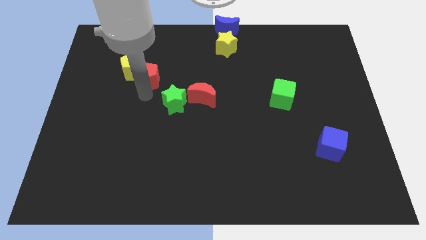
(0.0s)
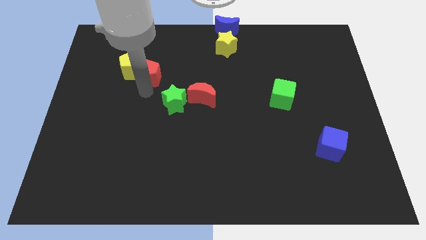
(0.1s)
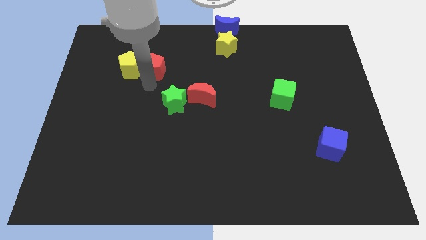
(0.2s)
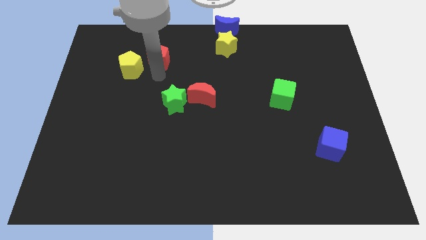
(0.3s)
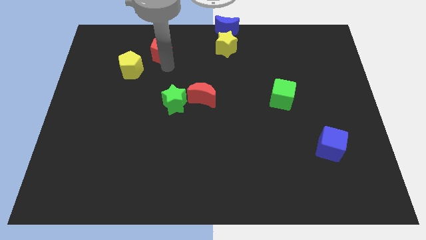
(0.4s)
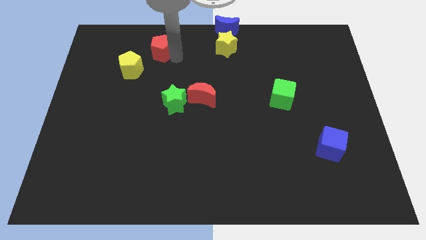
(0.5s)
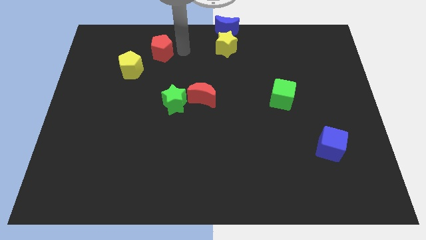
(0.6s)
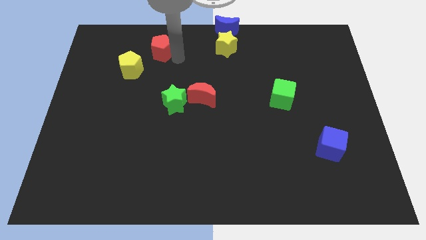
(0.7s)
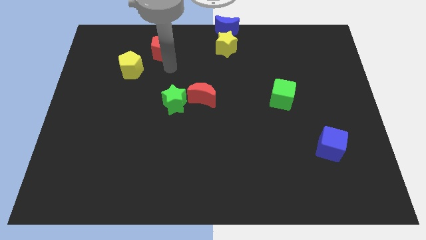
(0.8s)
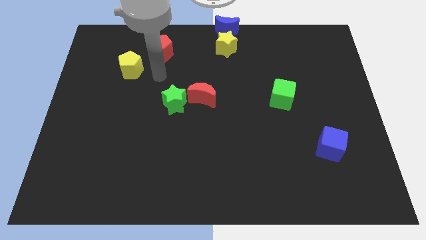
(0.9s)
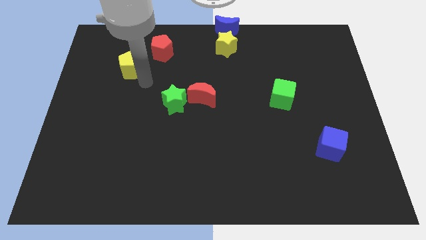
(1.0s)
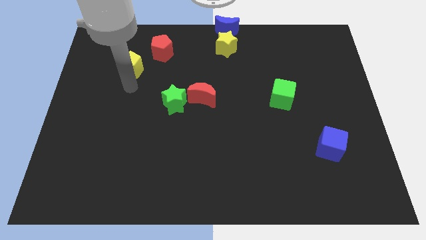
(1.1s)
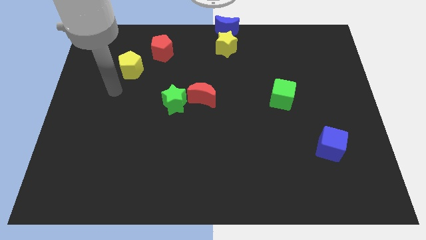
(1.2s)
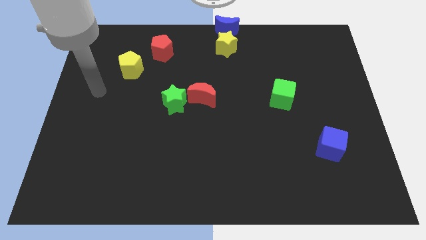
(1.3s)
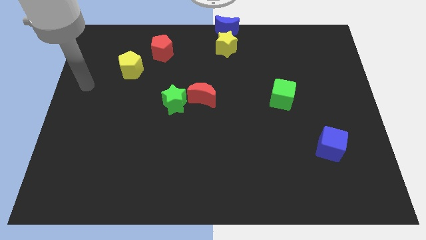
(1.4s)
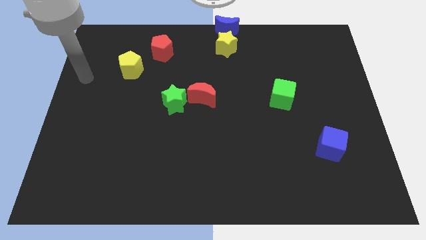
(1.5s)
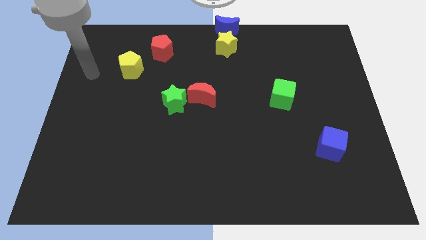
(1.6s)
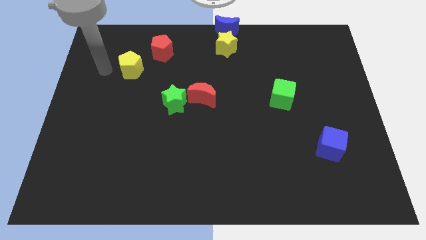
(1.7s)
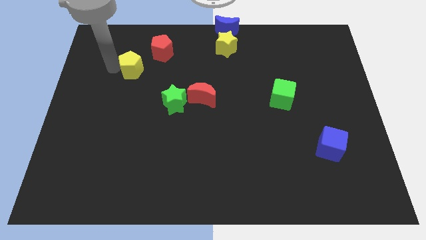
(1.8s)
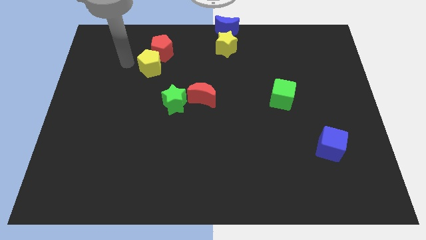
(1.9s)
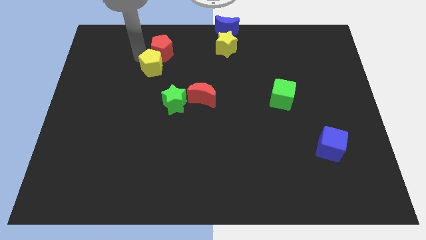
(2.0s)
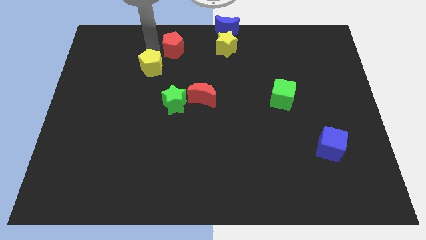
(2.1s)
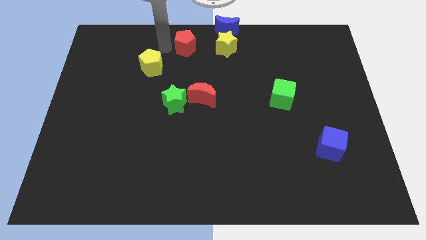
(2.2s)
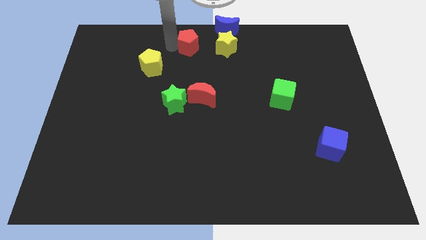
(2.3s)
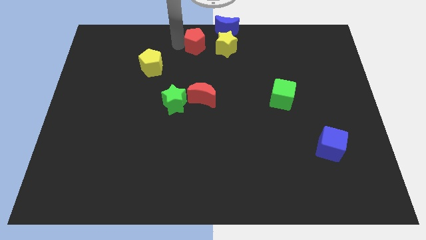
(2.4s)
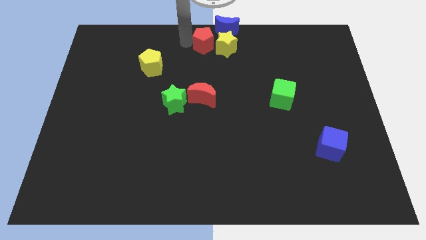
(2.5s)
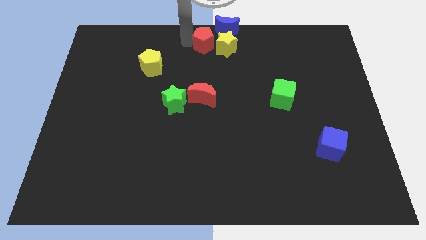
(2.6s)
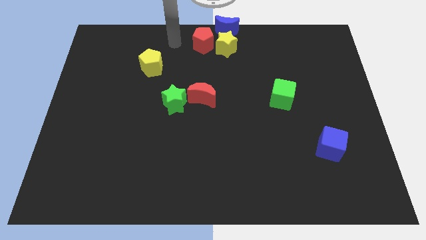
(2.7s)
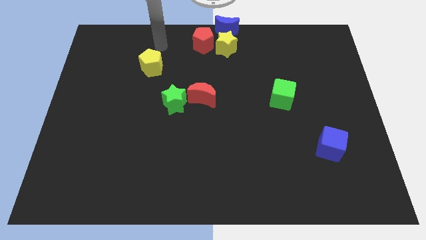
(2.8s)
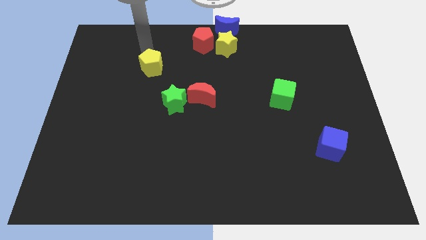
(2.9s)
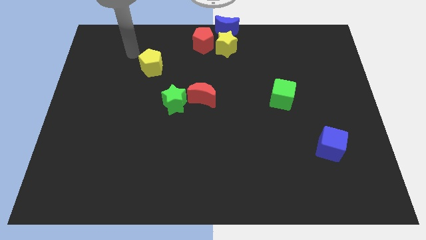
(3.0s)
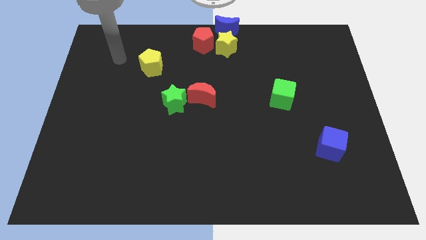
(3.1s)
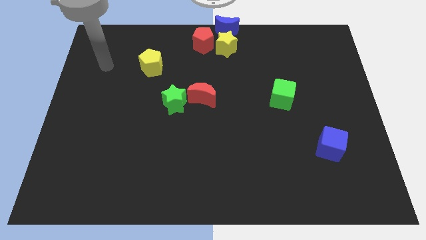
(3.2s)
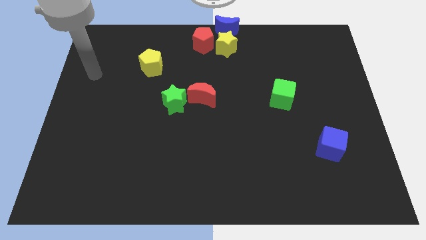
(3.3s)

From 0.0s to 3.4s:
move the red pentagon to the left side of the yellow star

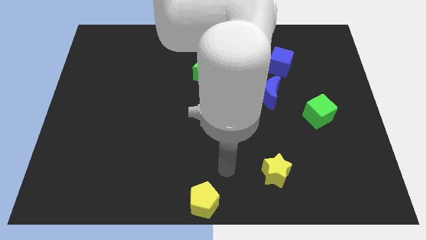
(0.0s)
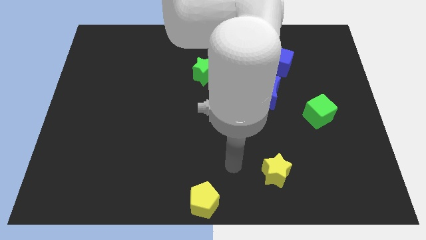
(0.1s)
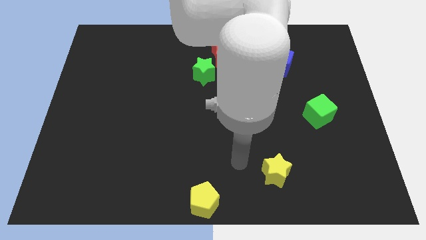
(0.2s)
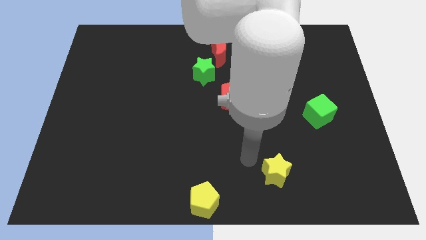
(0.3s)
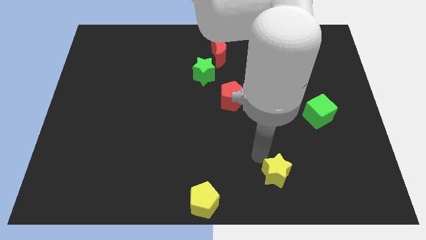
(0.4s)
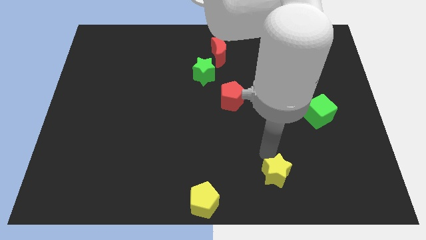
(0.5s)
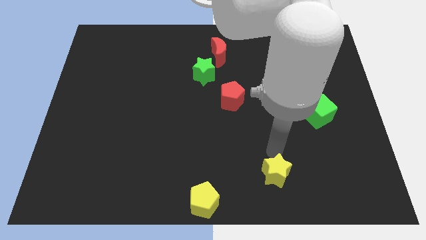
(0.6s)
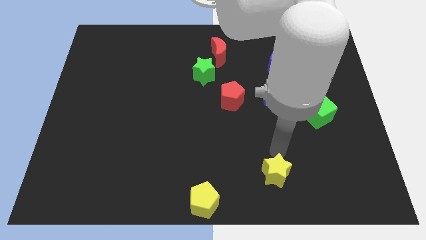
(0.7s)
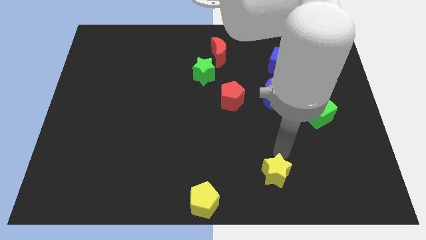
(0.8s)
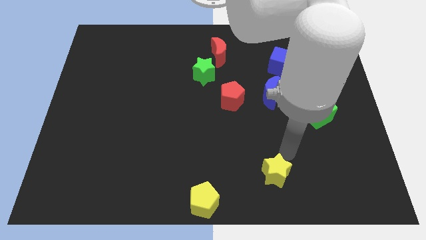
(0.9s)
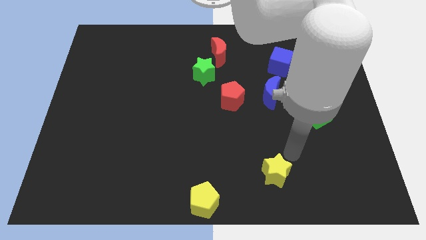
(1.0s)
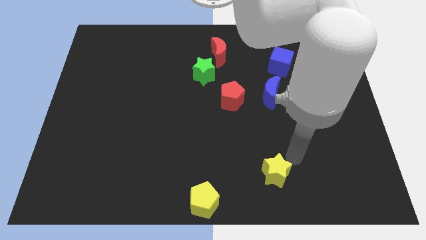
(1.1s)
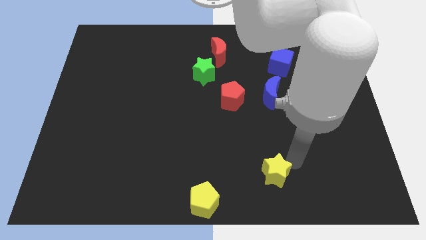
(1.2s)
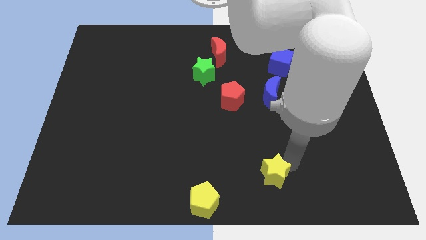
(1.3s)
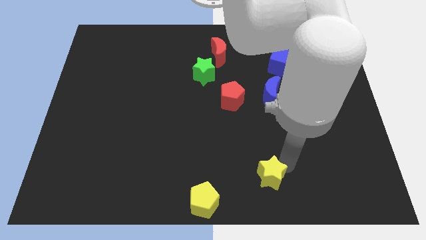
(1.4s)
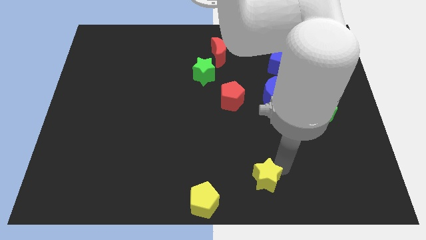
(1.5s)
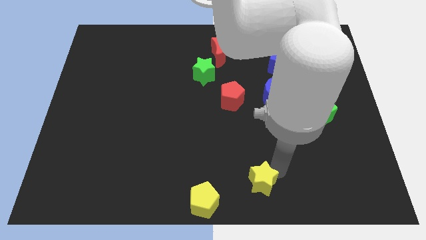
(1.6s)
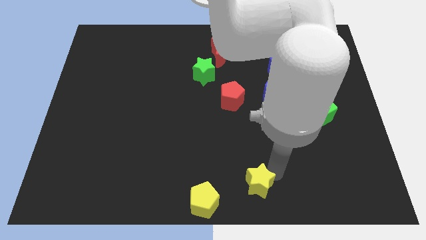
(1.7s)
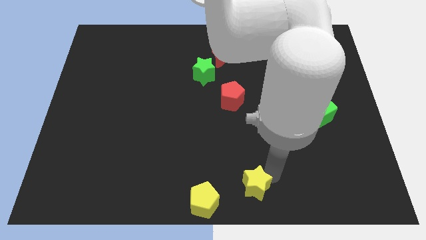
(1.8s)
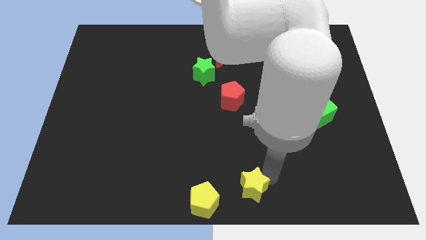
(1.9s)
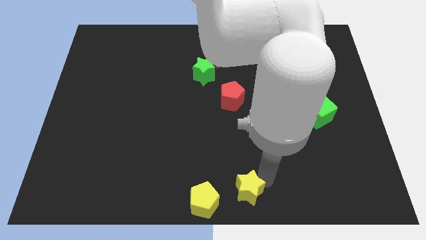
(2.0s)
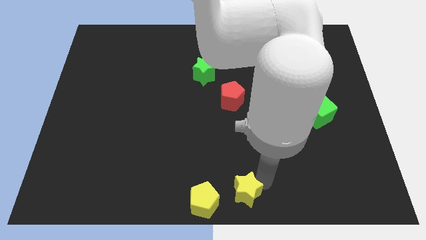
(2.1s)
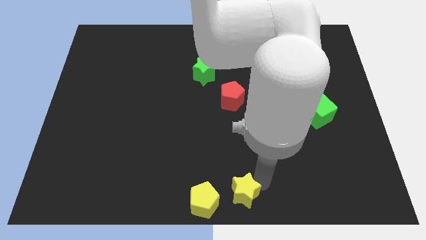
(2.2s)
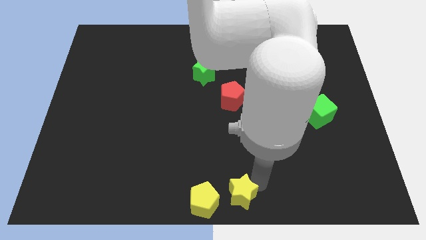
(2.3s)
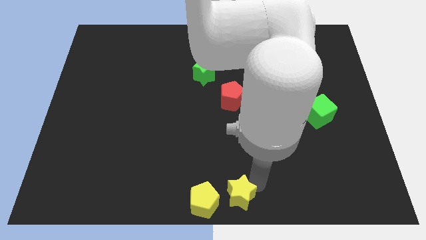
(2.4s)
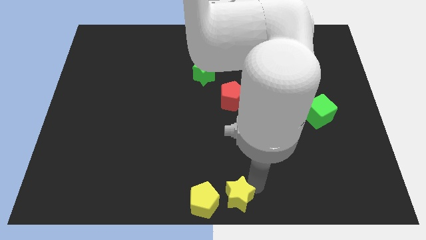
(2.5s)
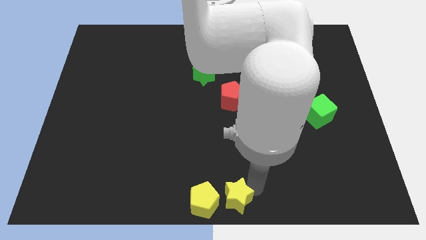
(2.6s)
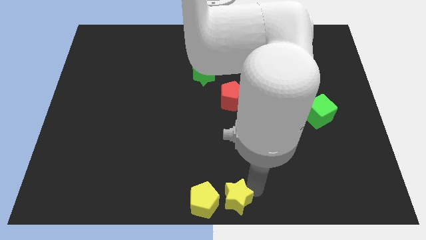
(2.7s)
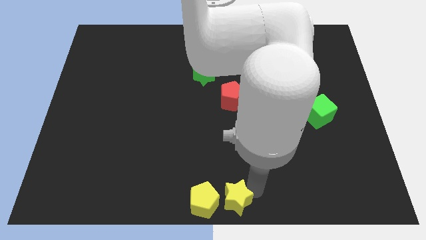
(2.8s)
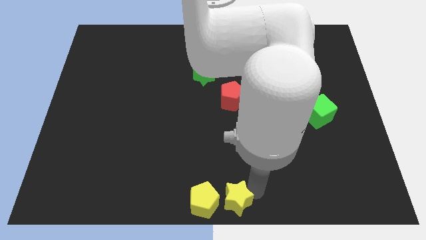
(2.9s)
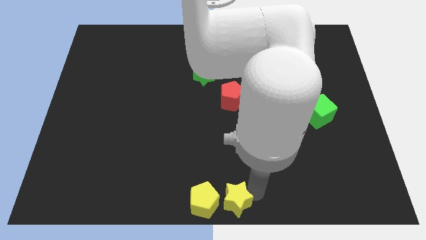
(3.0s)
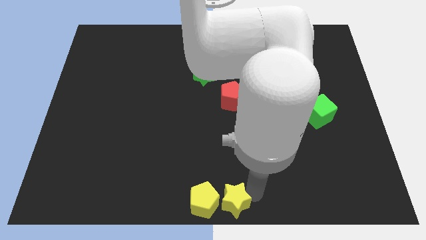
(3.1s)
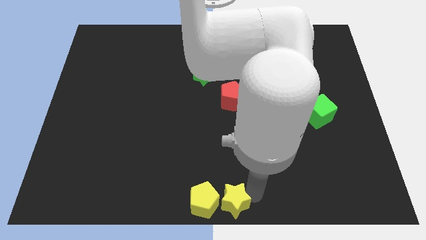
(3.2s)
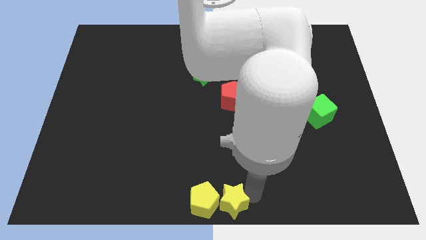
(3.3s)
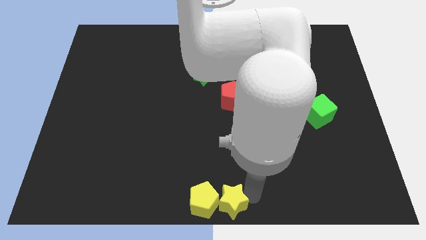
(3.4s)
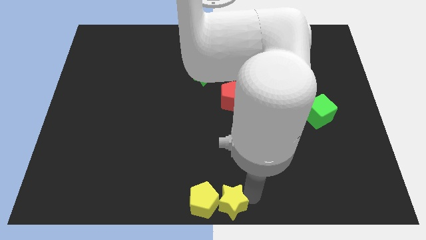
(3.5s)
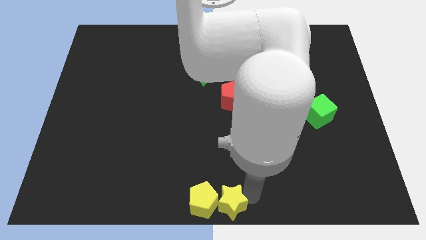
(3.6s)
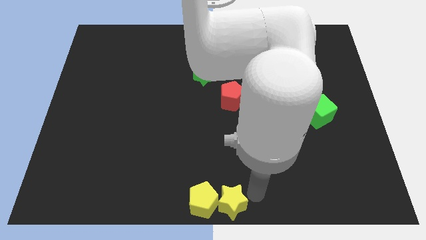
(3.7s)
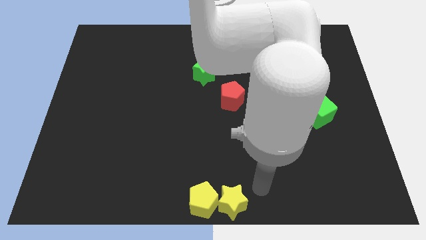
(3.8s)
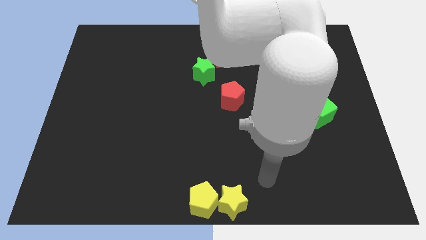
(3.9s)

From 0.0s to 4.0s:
move the yellow star to the right of the yellow pentagon

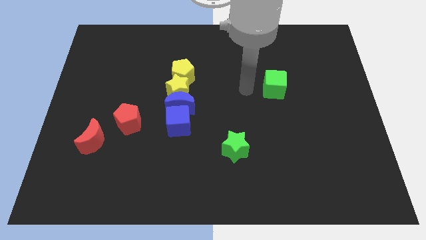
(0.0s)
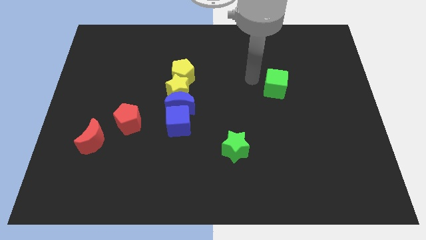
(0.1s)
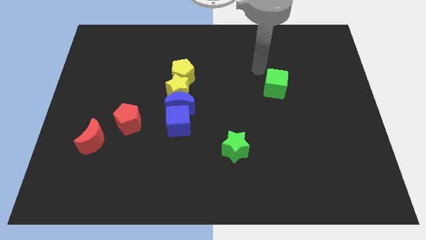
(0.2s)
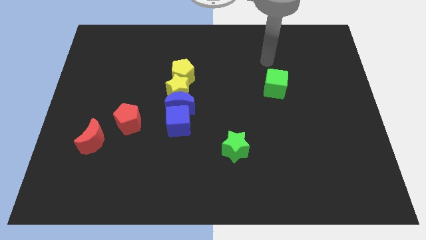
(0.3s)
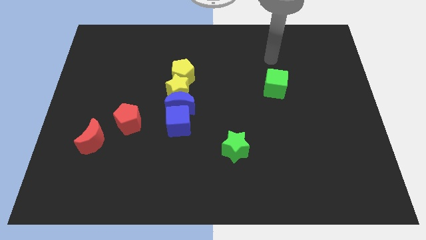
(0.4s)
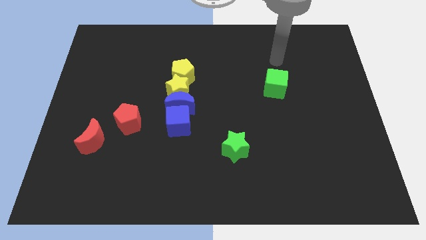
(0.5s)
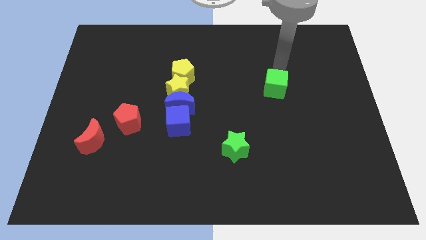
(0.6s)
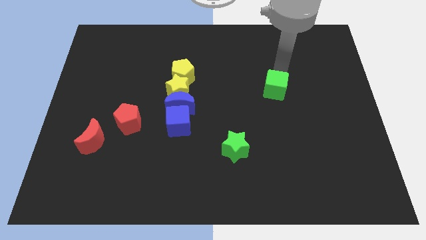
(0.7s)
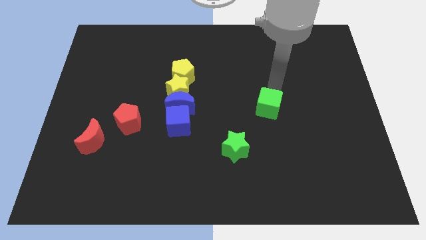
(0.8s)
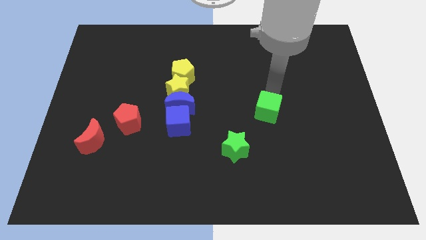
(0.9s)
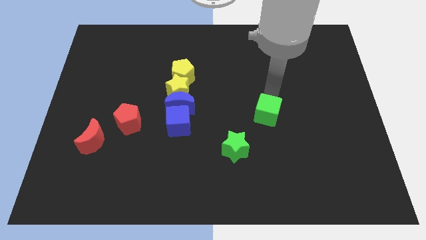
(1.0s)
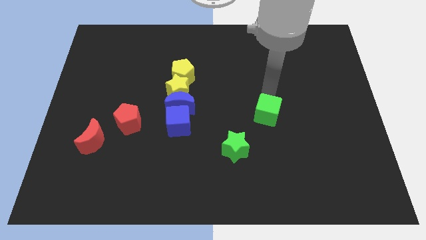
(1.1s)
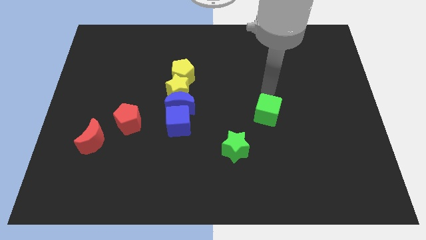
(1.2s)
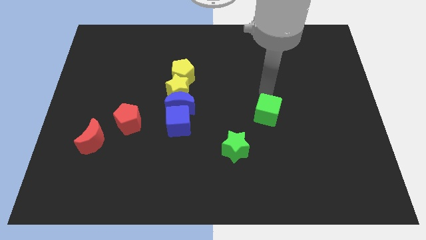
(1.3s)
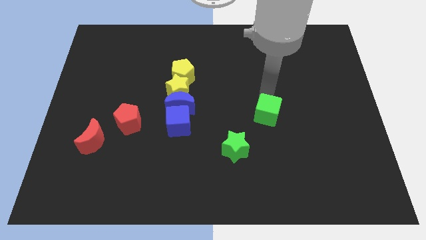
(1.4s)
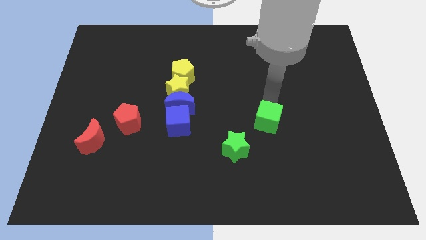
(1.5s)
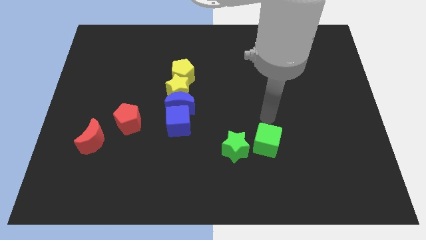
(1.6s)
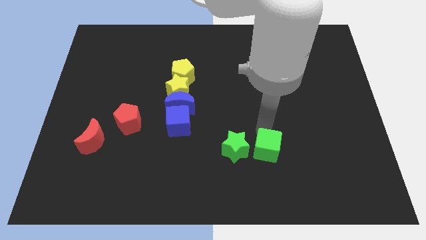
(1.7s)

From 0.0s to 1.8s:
place the green cube to the right side of green star
